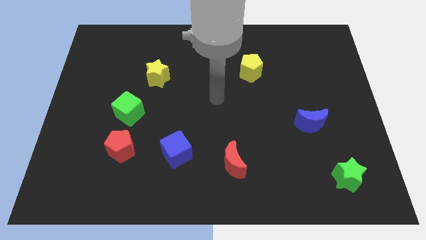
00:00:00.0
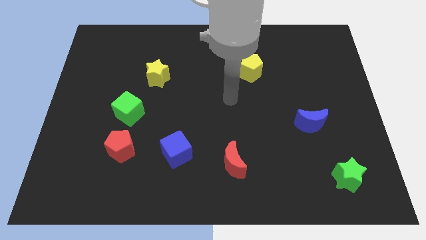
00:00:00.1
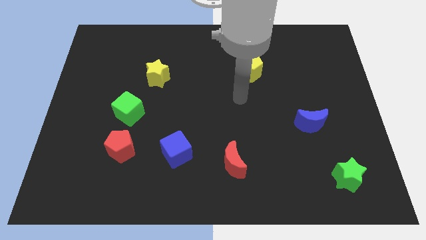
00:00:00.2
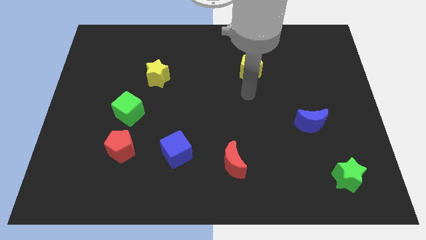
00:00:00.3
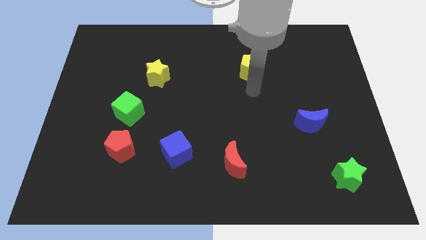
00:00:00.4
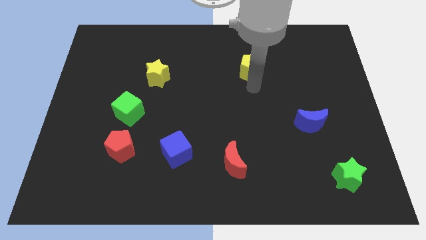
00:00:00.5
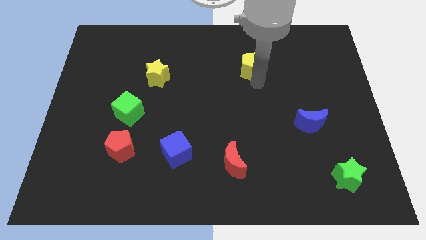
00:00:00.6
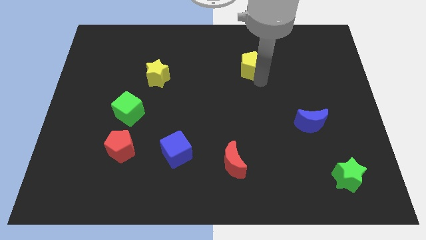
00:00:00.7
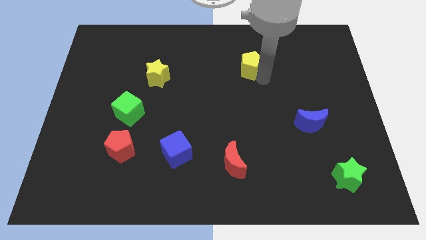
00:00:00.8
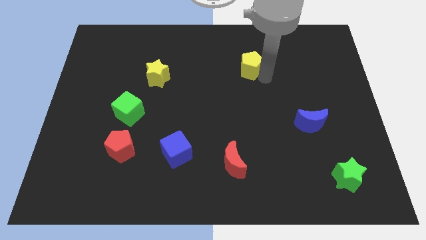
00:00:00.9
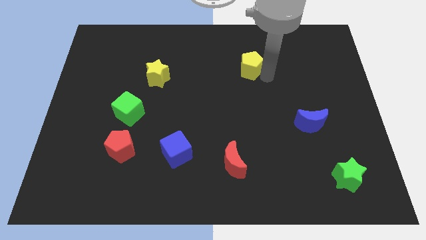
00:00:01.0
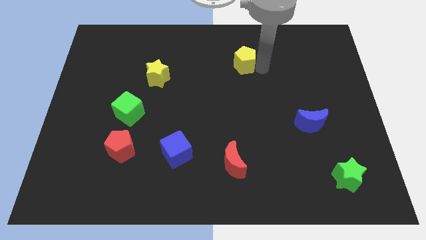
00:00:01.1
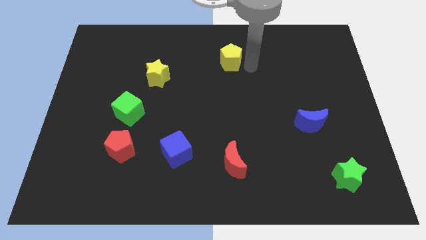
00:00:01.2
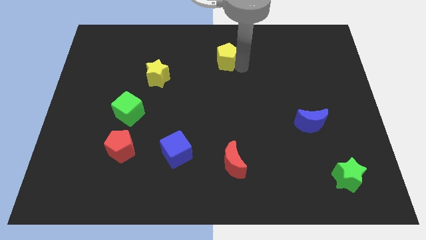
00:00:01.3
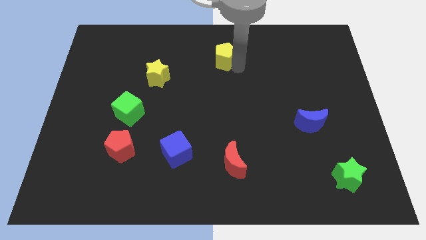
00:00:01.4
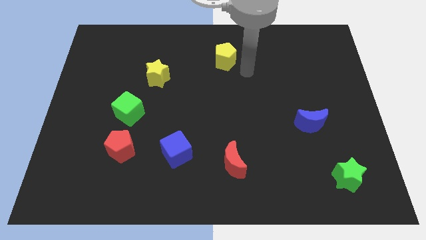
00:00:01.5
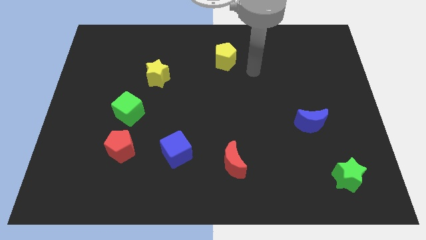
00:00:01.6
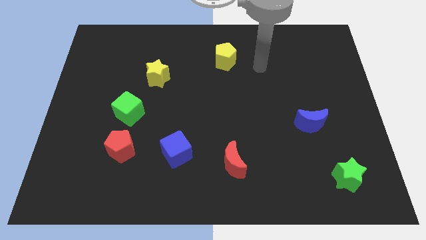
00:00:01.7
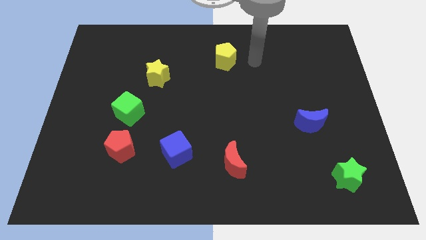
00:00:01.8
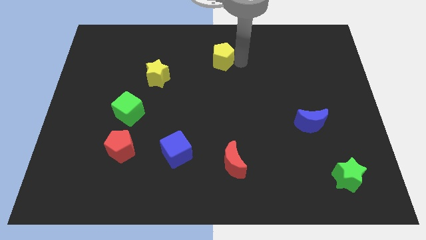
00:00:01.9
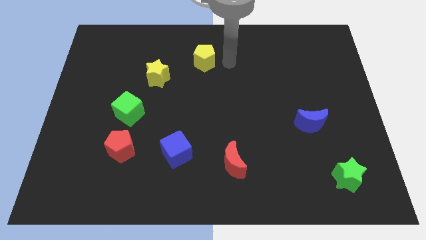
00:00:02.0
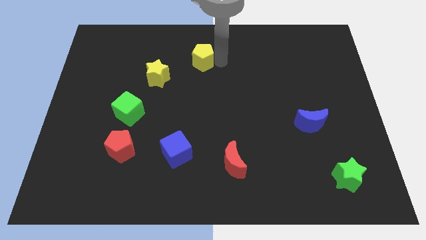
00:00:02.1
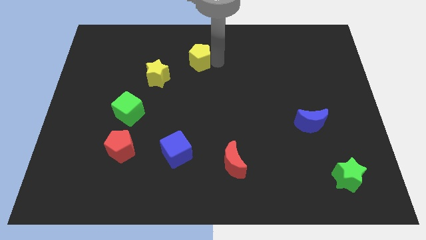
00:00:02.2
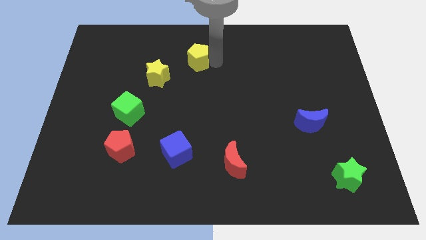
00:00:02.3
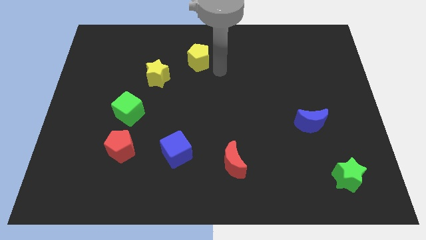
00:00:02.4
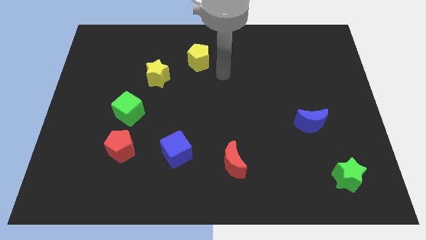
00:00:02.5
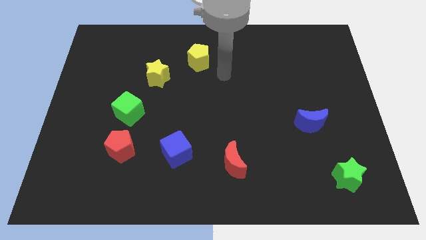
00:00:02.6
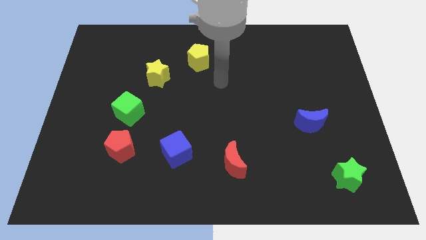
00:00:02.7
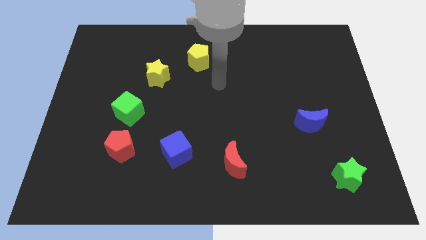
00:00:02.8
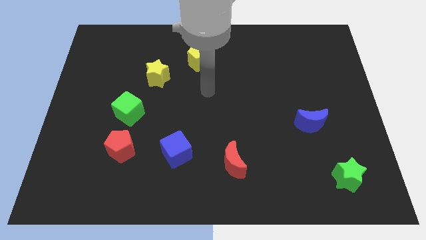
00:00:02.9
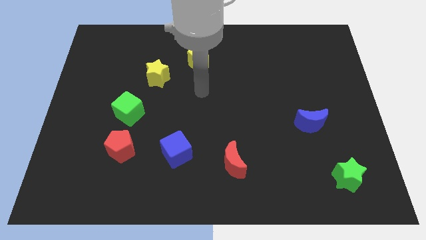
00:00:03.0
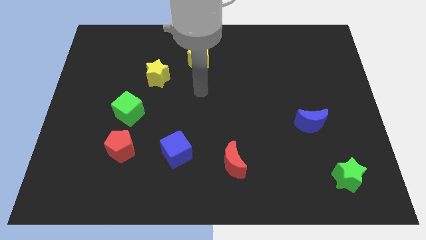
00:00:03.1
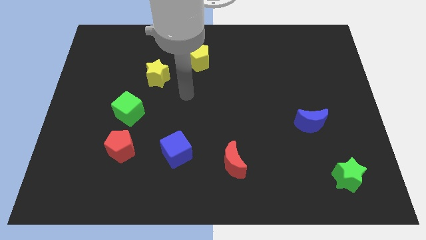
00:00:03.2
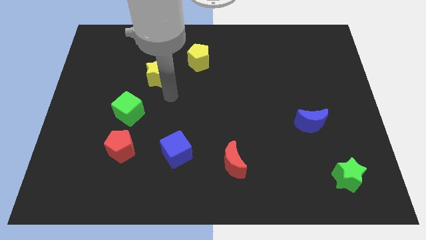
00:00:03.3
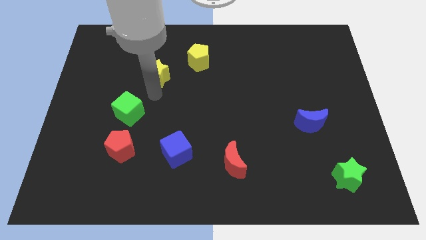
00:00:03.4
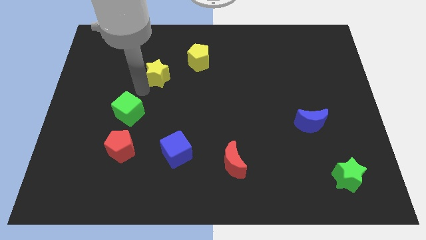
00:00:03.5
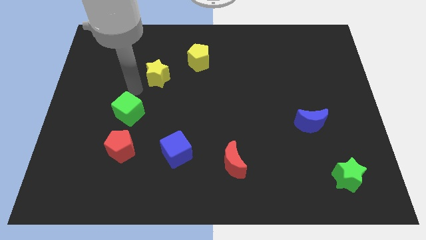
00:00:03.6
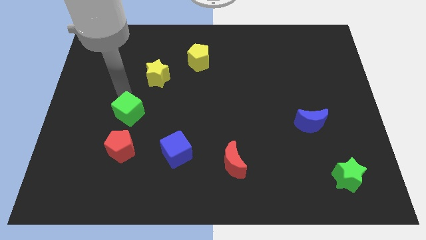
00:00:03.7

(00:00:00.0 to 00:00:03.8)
push the yellow pentagon to top right of yellow star

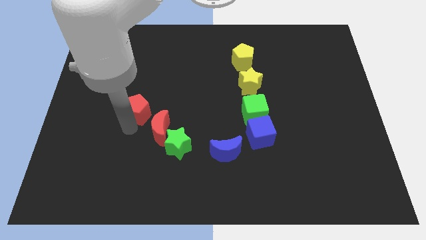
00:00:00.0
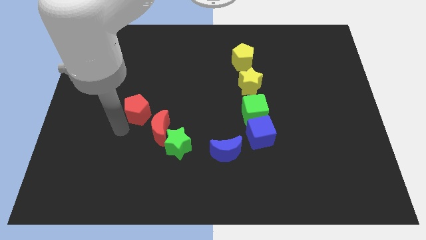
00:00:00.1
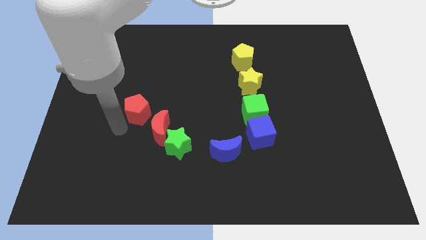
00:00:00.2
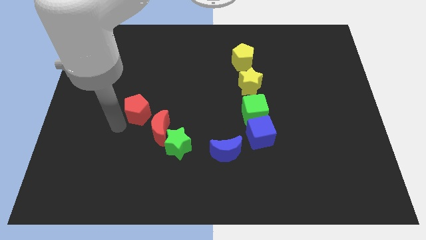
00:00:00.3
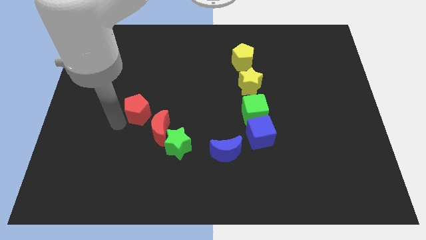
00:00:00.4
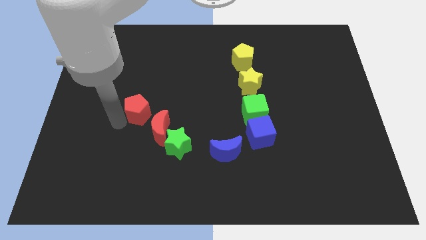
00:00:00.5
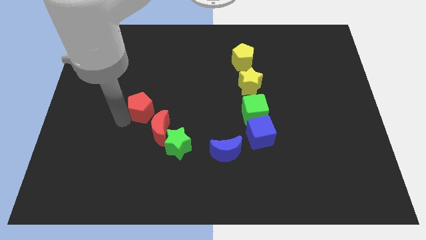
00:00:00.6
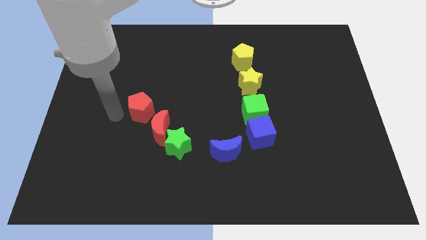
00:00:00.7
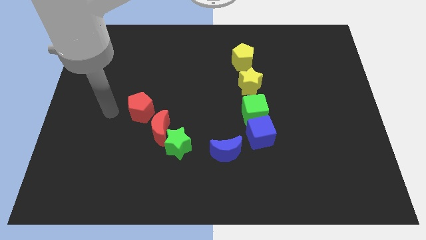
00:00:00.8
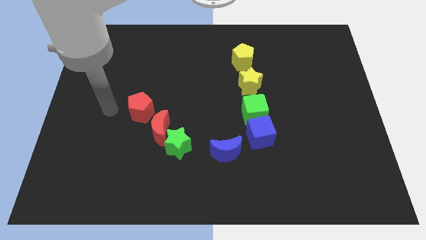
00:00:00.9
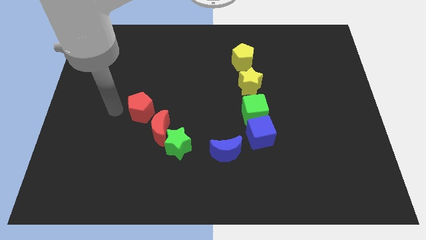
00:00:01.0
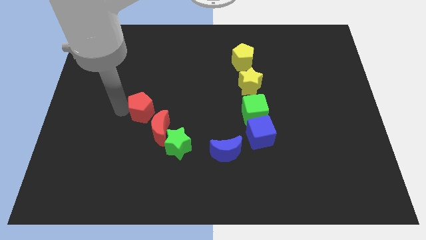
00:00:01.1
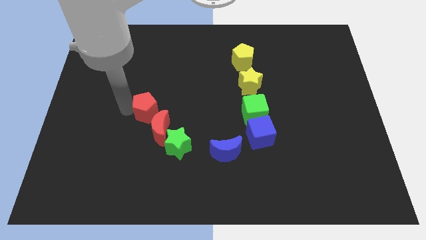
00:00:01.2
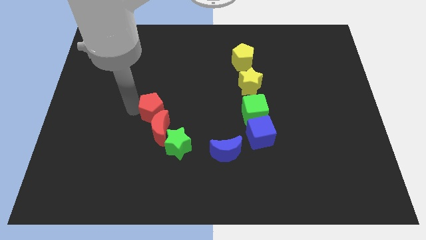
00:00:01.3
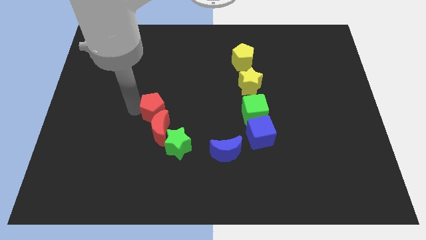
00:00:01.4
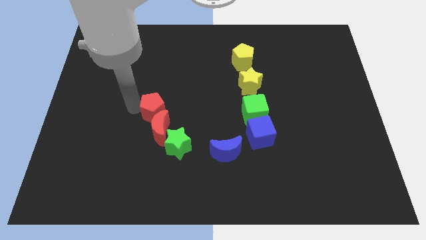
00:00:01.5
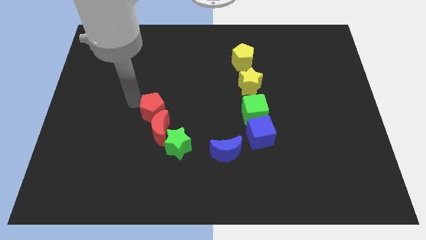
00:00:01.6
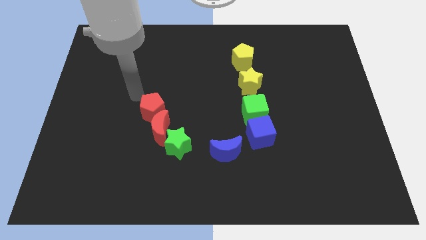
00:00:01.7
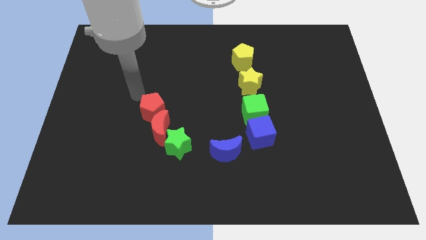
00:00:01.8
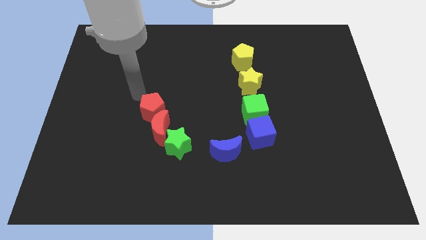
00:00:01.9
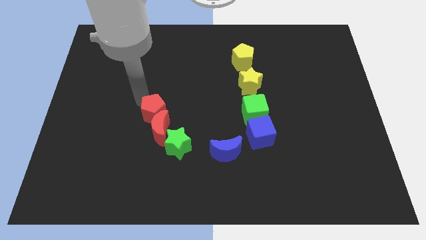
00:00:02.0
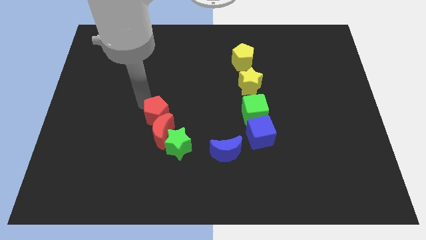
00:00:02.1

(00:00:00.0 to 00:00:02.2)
push red pentagon into red moon

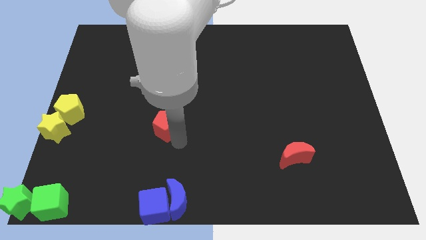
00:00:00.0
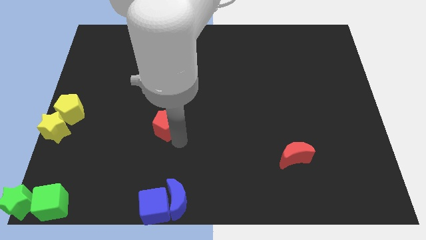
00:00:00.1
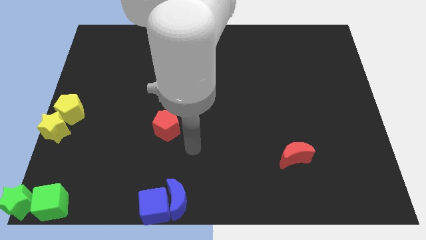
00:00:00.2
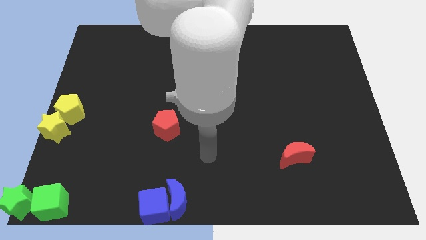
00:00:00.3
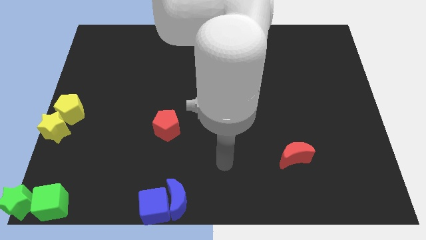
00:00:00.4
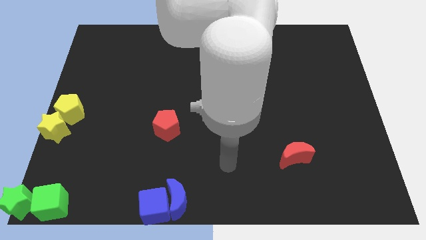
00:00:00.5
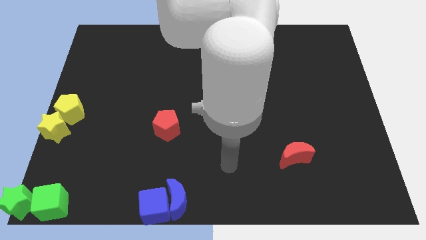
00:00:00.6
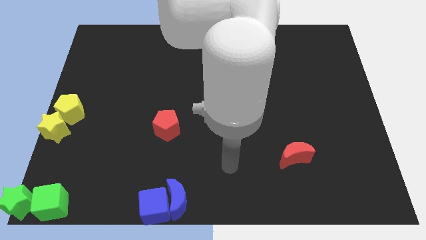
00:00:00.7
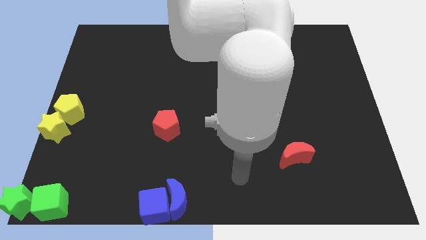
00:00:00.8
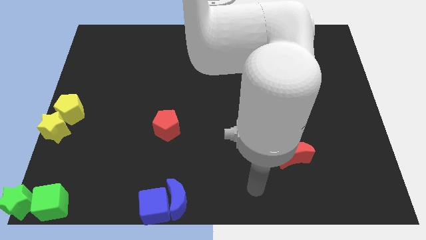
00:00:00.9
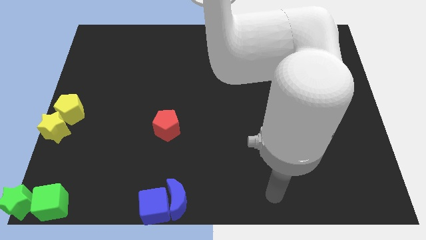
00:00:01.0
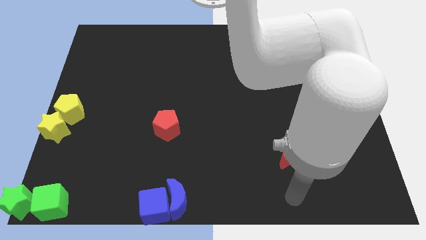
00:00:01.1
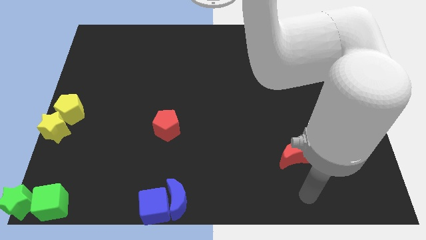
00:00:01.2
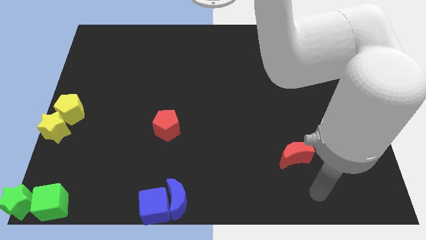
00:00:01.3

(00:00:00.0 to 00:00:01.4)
place your arm to the bottom of red crescent

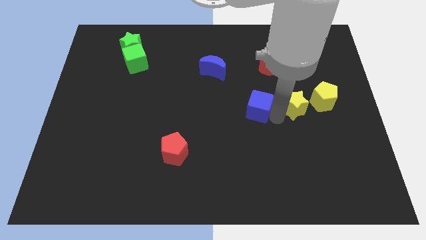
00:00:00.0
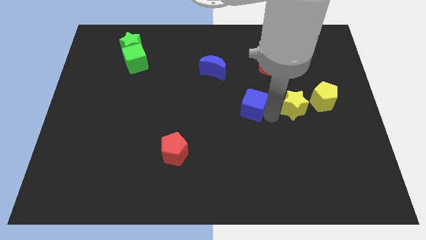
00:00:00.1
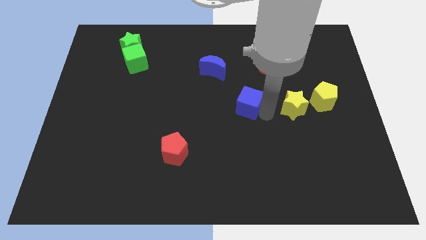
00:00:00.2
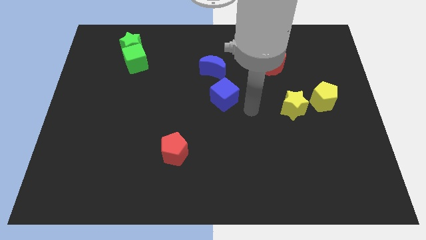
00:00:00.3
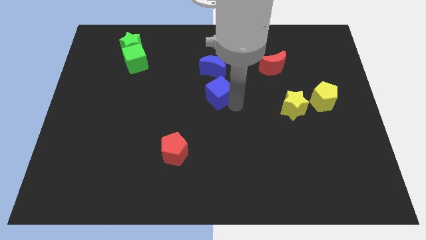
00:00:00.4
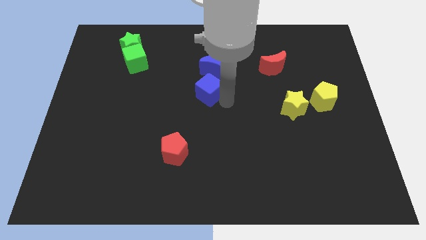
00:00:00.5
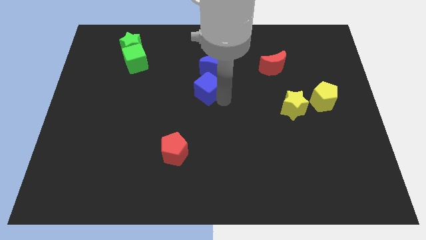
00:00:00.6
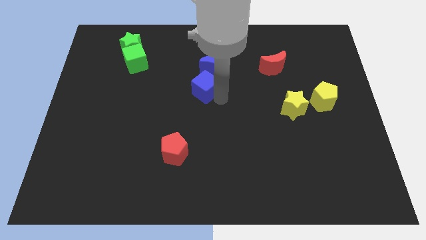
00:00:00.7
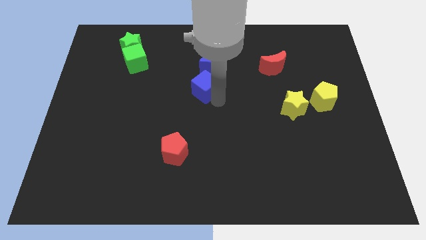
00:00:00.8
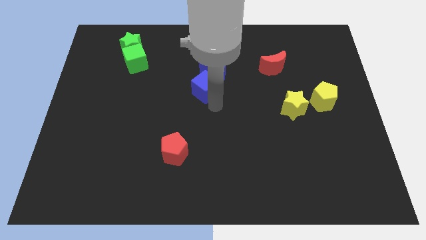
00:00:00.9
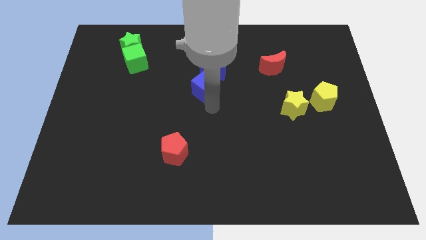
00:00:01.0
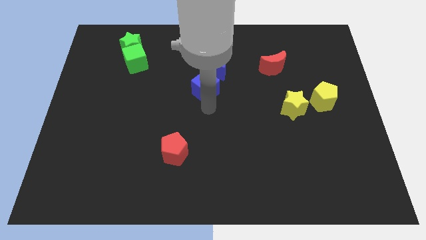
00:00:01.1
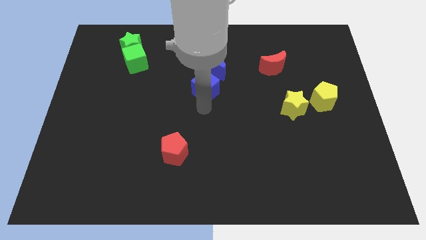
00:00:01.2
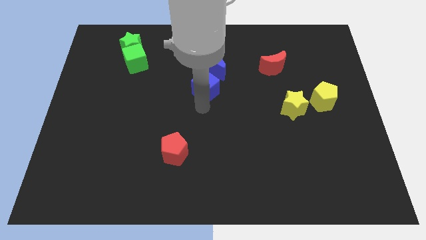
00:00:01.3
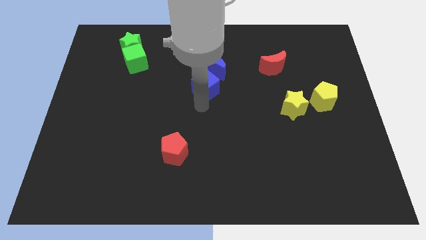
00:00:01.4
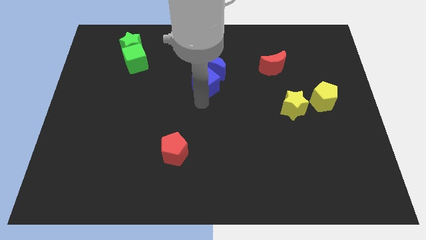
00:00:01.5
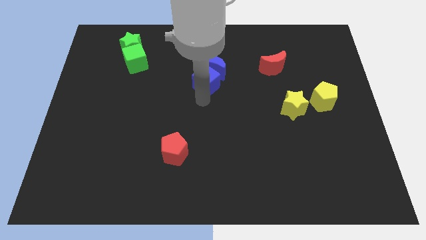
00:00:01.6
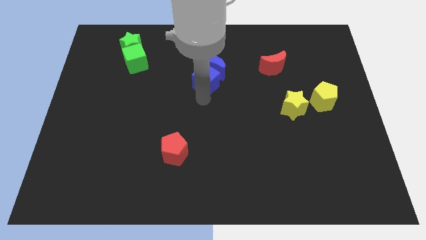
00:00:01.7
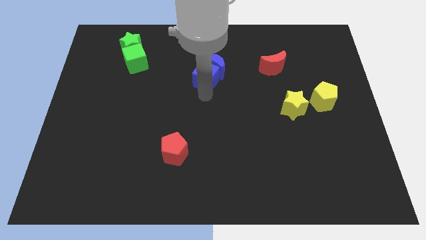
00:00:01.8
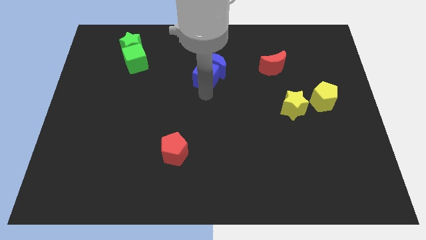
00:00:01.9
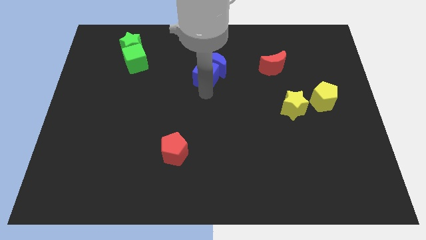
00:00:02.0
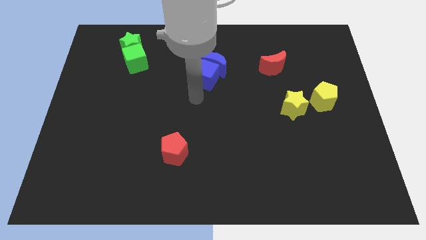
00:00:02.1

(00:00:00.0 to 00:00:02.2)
push the blue cube into the bottom side of the blue crescent
